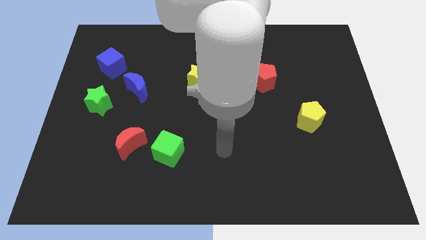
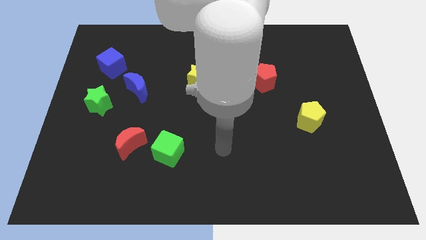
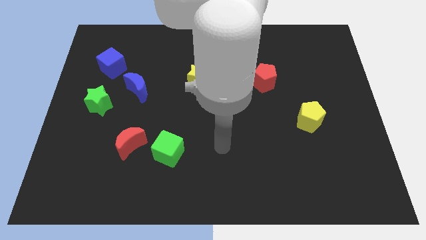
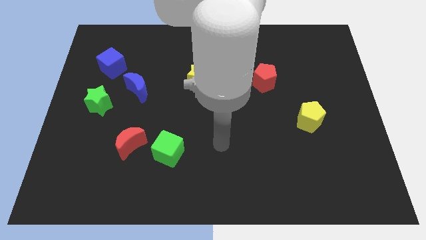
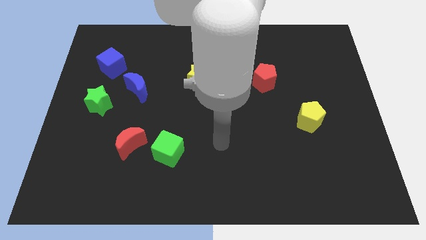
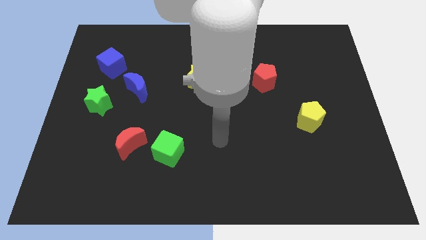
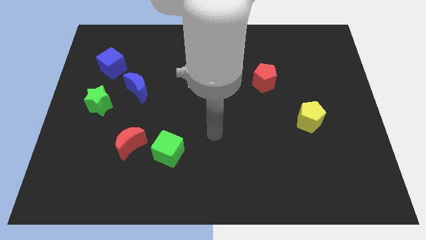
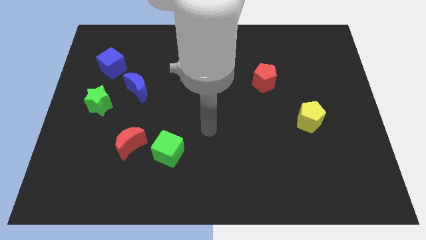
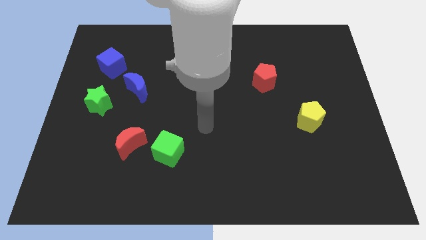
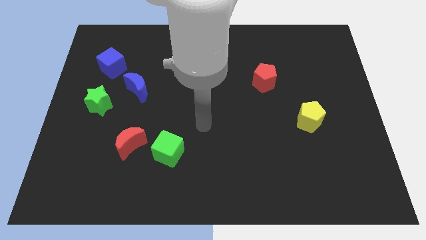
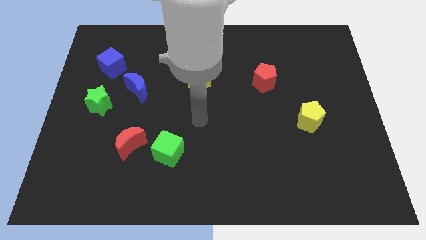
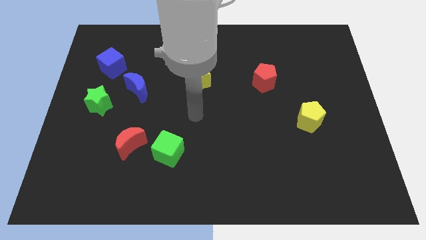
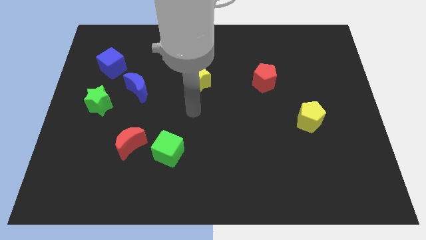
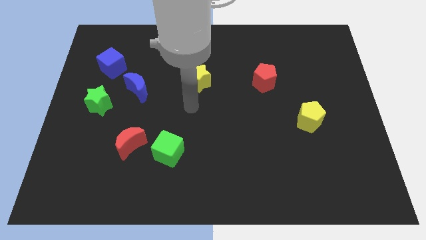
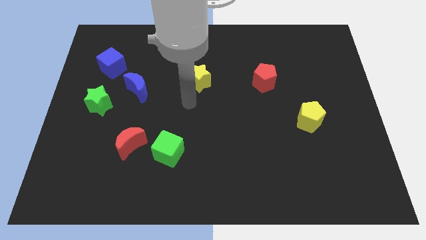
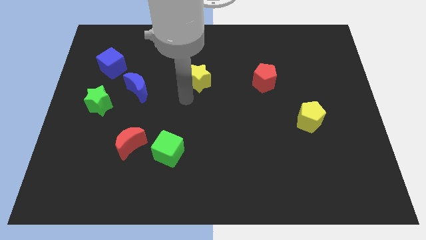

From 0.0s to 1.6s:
point the arm at the bottom of the yellow star

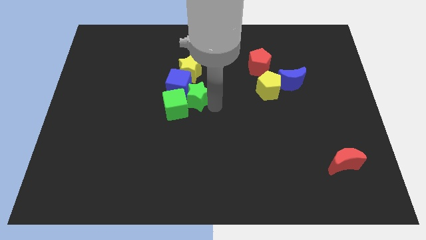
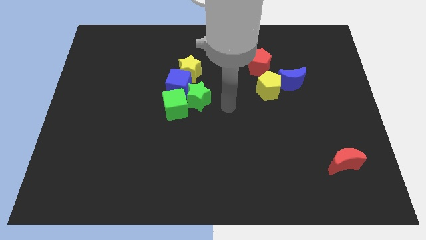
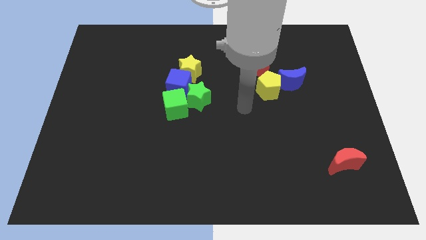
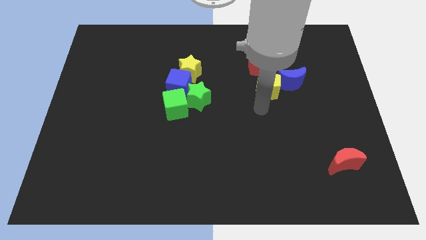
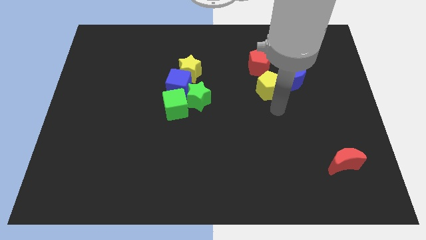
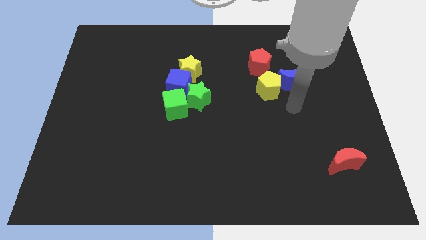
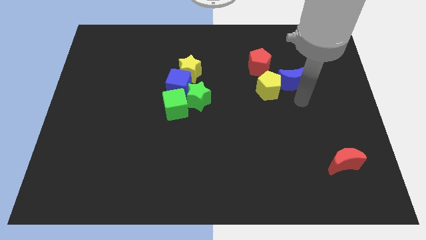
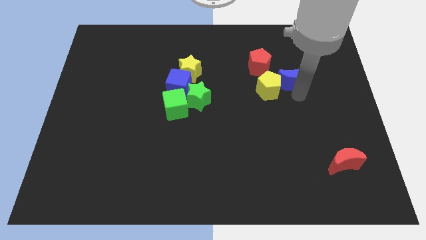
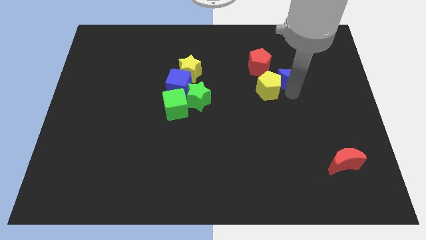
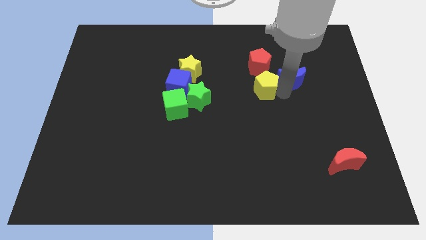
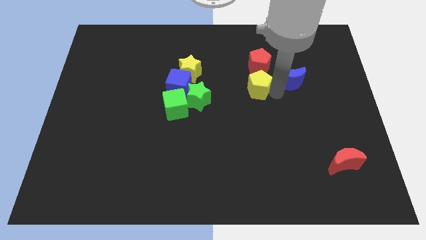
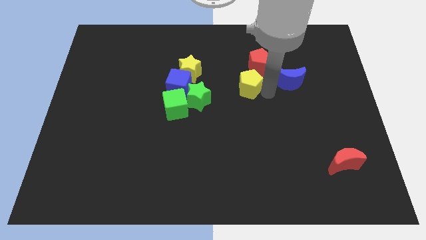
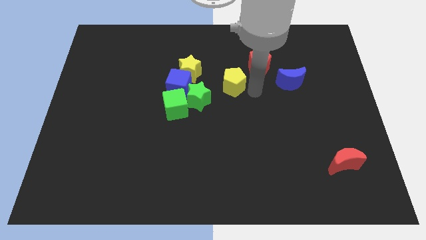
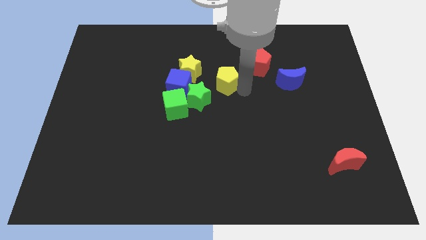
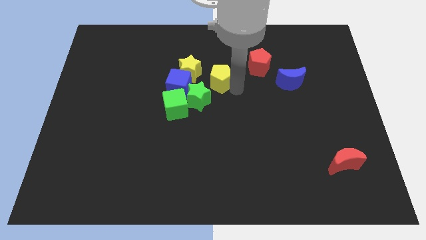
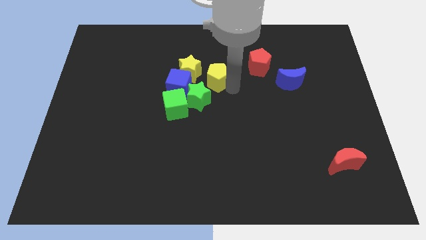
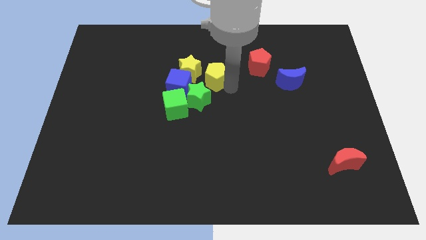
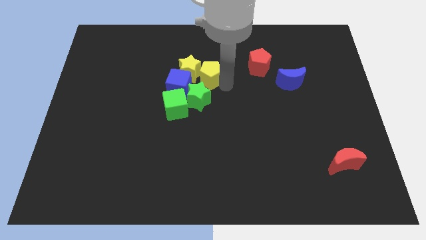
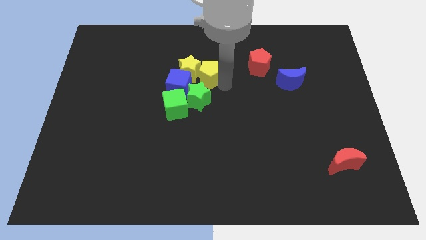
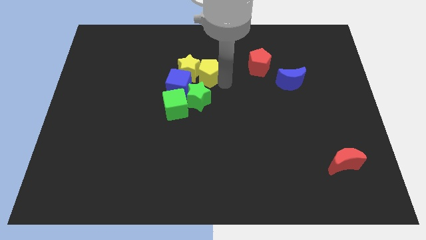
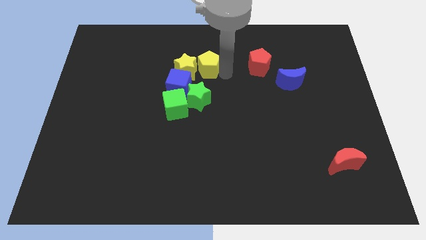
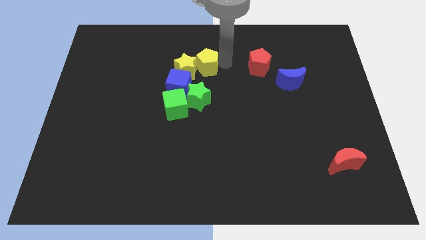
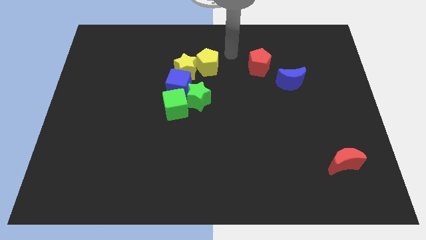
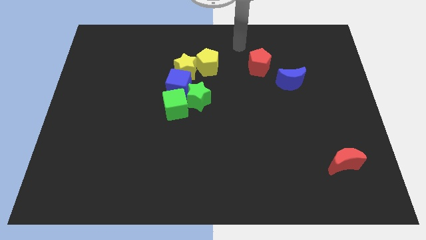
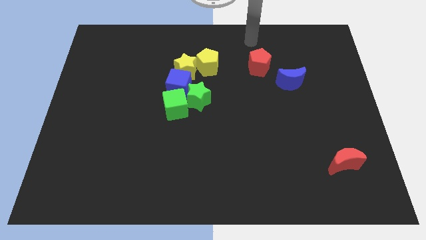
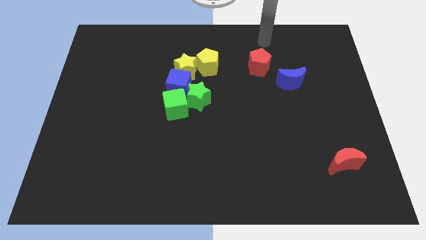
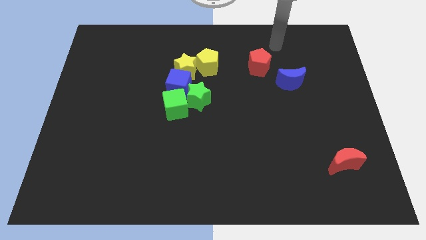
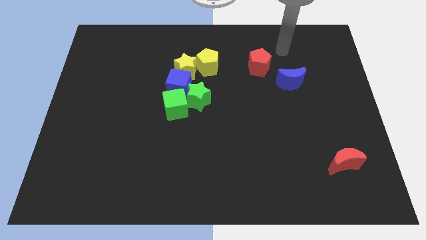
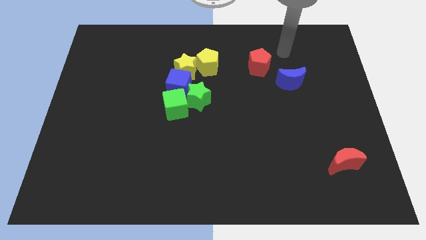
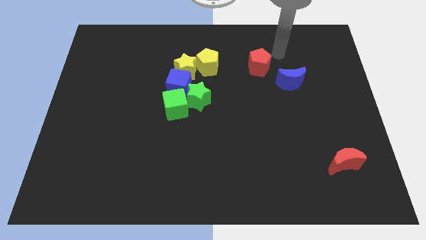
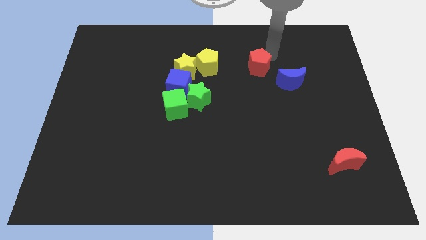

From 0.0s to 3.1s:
push the yellow pentagon into the yellow star

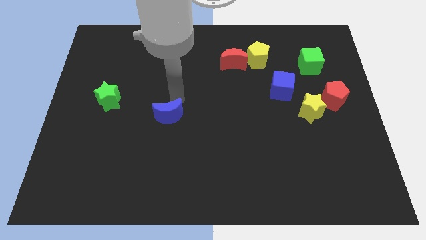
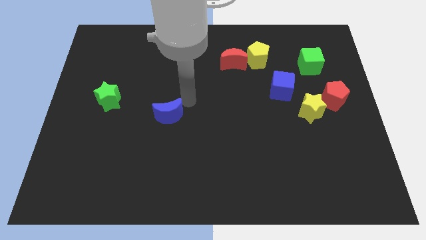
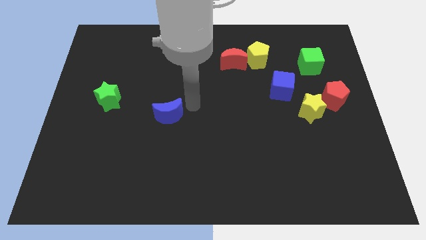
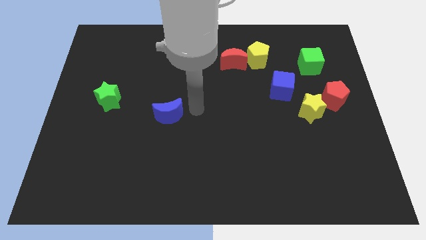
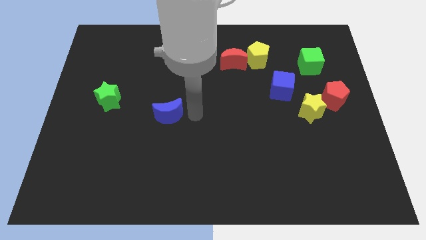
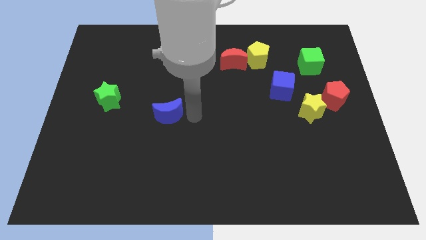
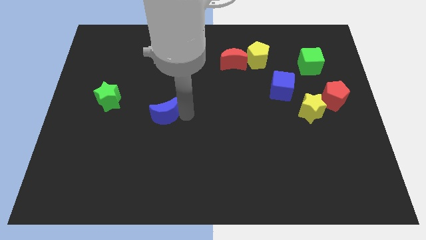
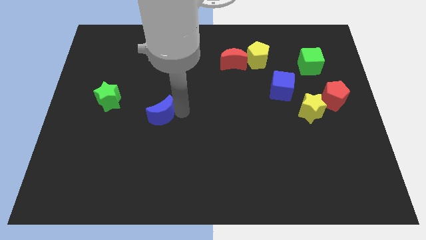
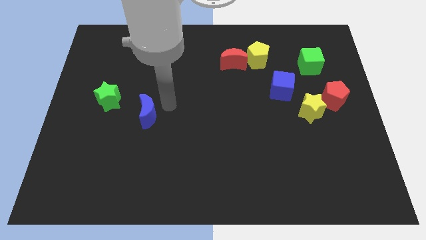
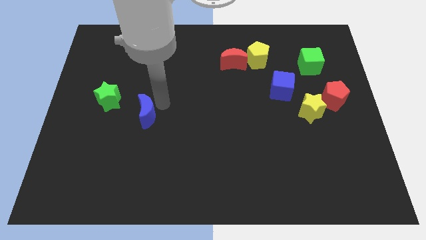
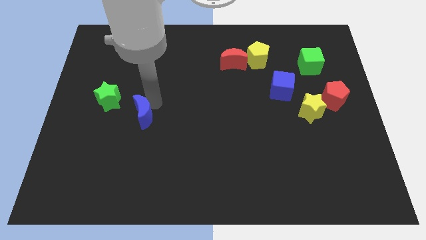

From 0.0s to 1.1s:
slide blue moon towards green star

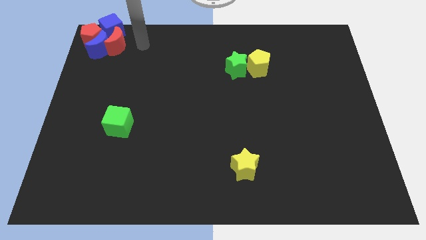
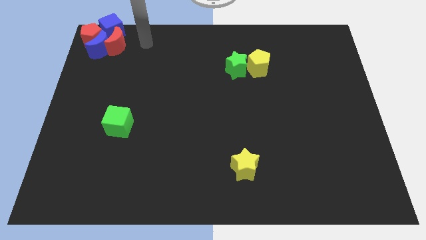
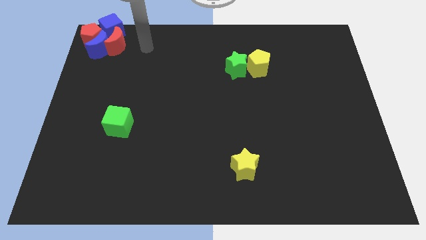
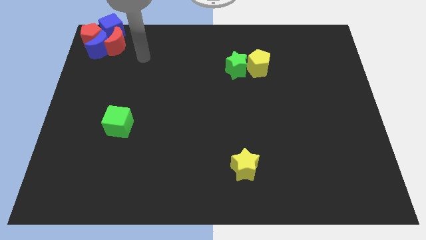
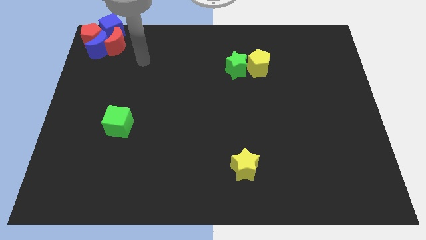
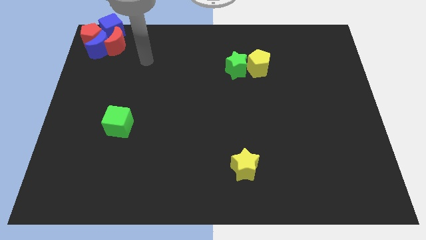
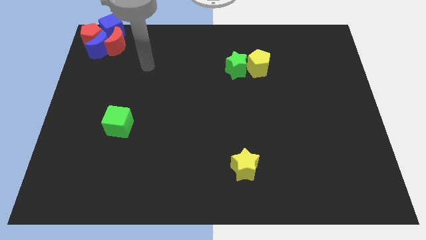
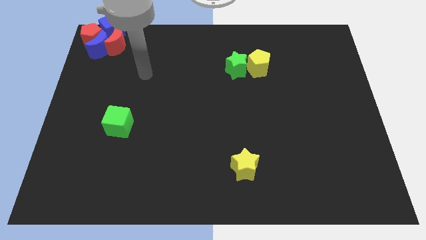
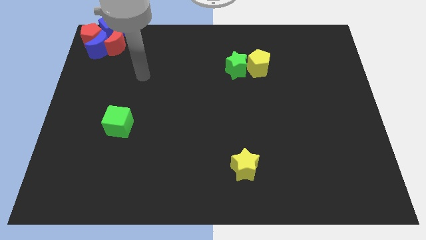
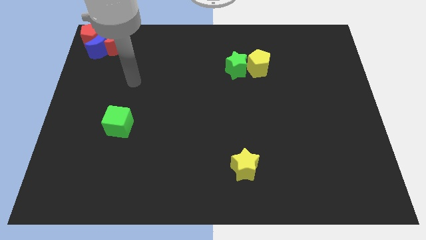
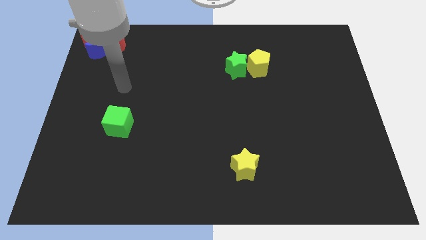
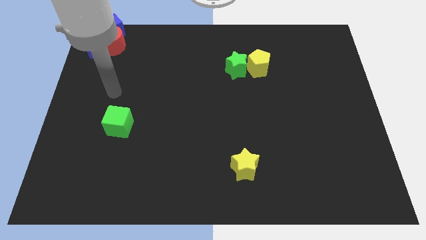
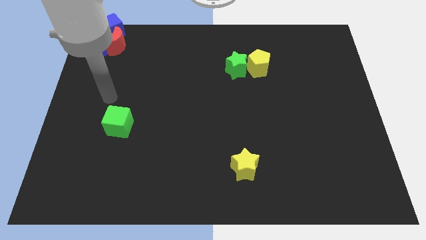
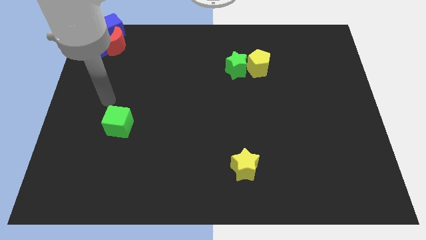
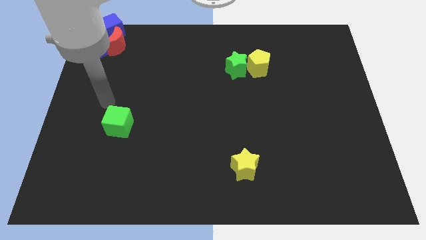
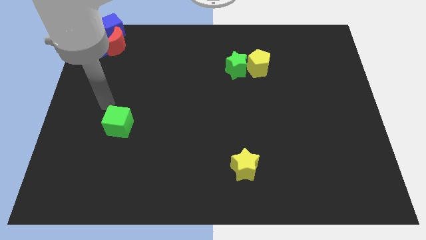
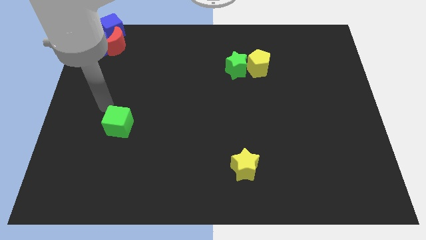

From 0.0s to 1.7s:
move your arm away from the red moon

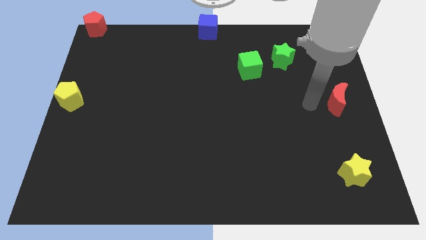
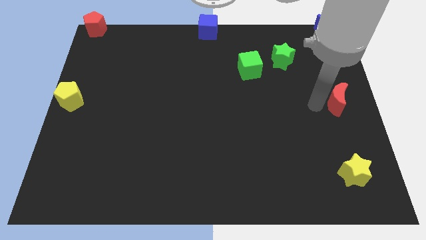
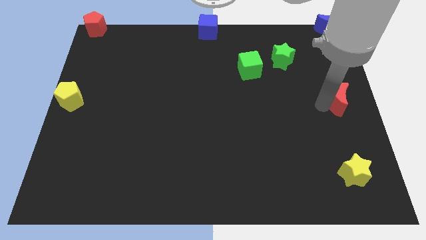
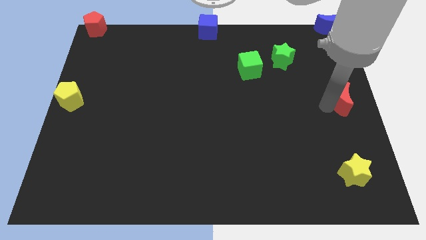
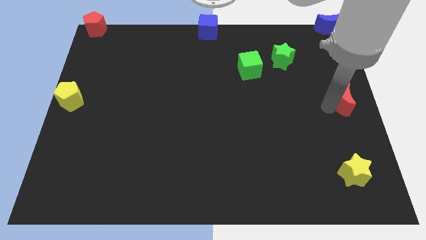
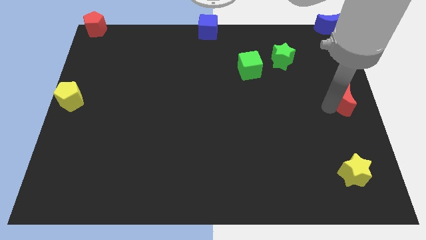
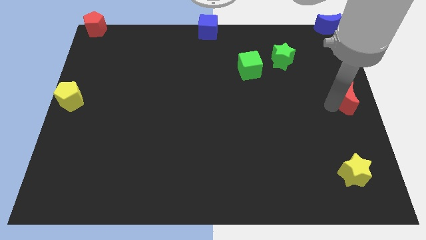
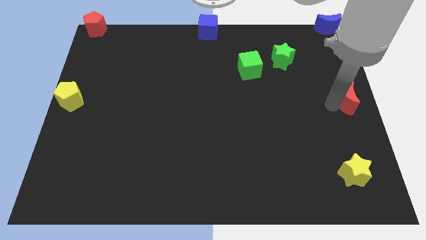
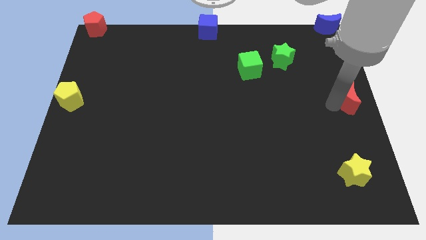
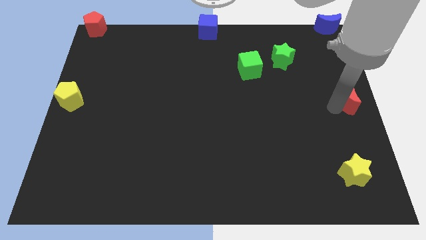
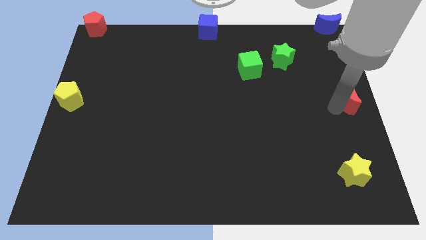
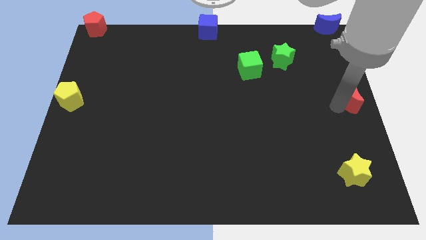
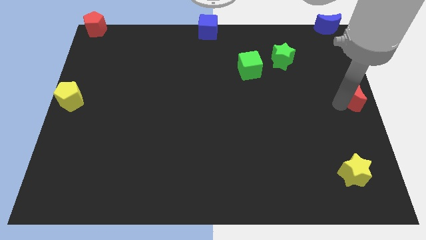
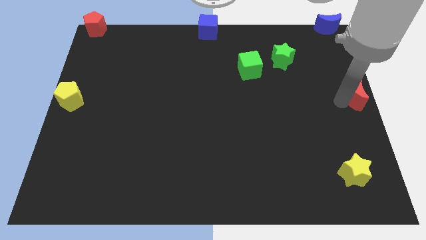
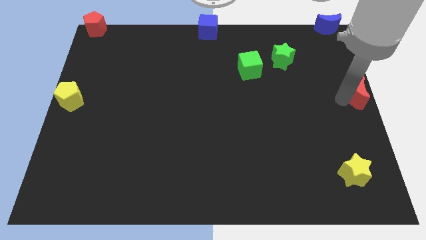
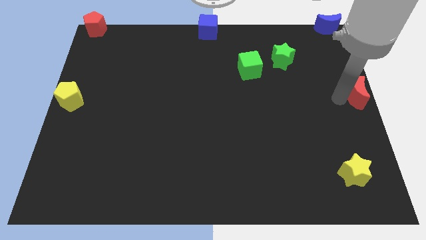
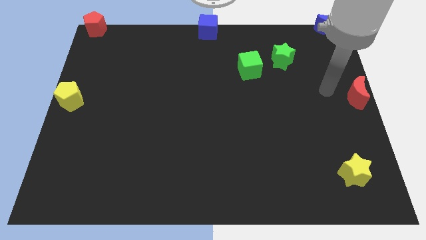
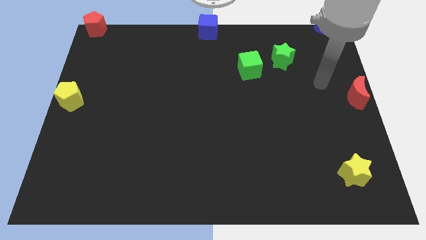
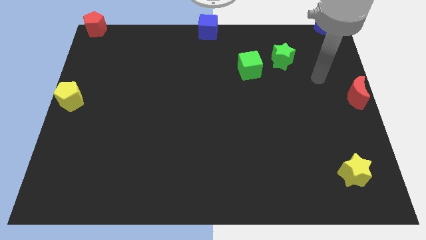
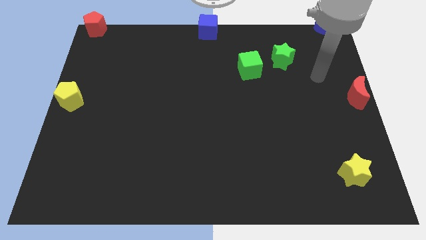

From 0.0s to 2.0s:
slide the red crescent to the centre right of the board
